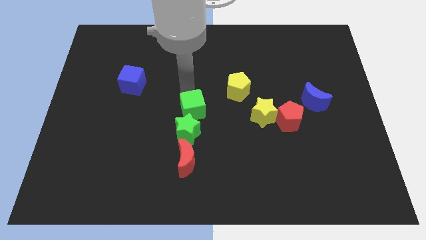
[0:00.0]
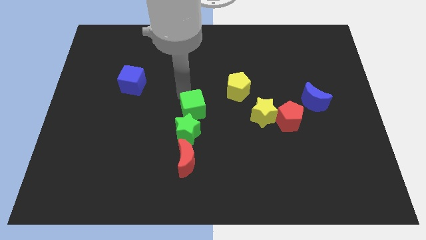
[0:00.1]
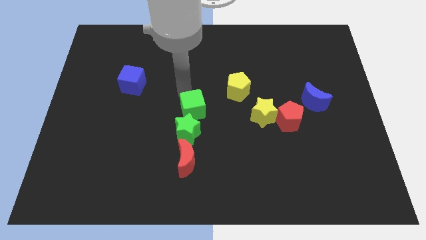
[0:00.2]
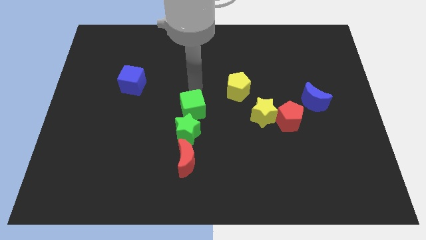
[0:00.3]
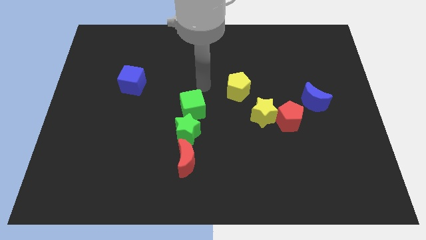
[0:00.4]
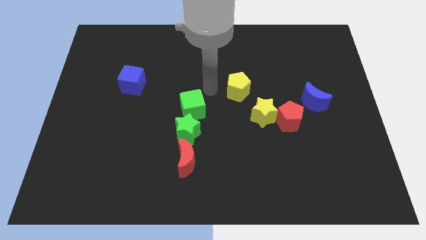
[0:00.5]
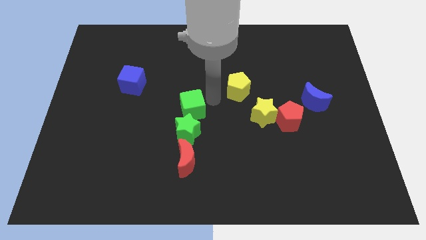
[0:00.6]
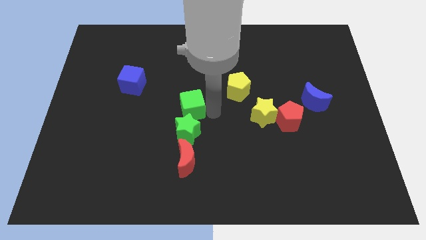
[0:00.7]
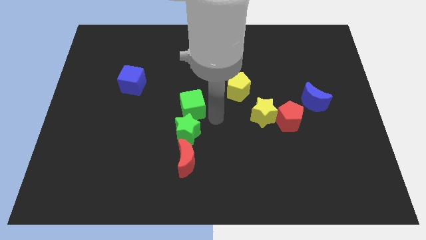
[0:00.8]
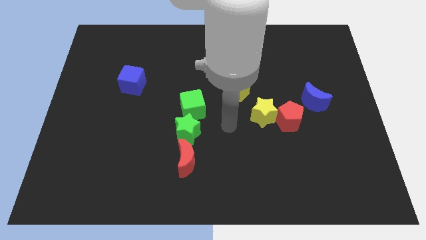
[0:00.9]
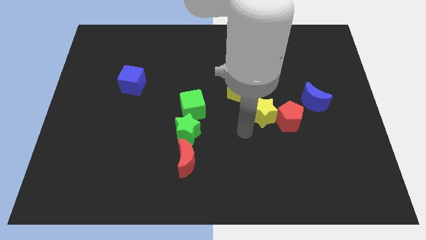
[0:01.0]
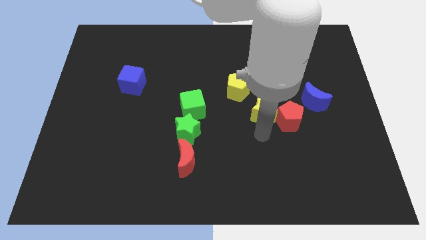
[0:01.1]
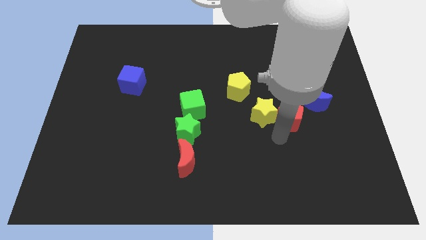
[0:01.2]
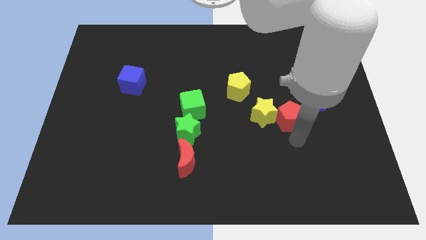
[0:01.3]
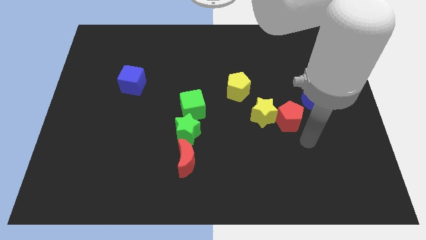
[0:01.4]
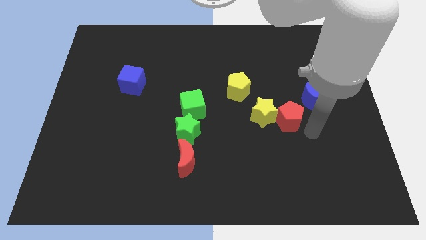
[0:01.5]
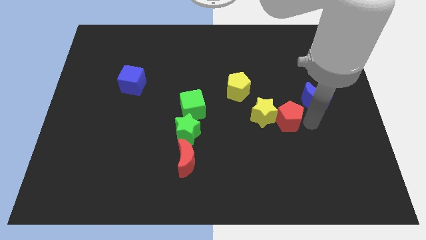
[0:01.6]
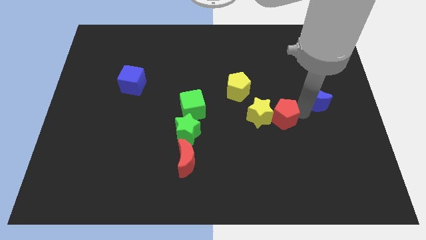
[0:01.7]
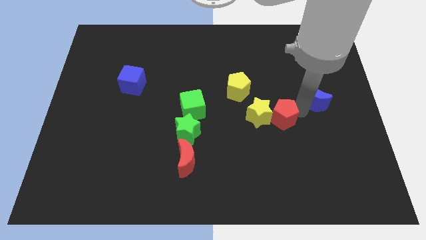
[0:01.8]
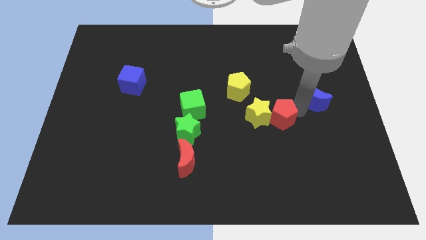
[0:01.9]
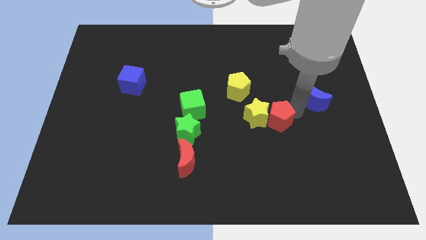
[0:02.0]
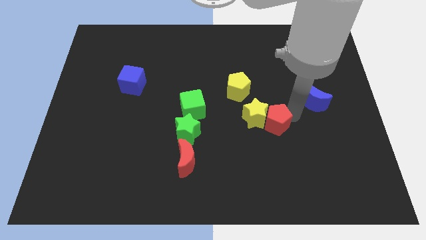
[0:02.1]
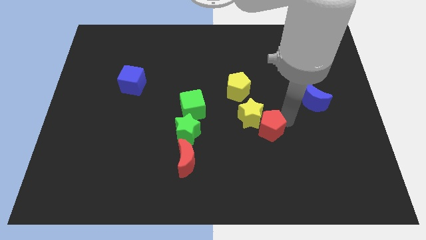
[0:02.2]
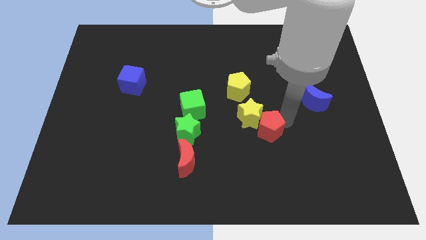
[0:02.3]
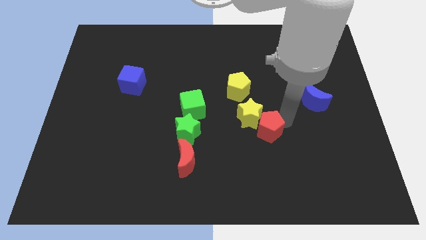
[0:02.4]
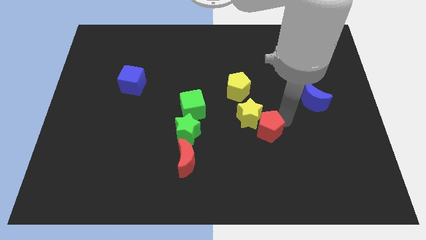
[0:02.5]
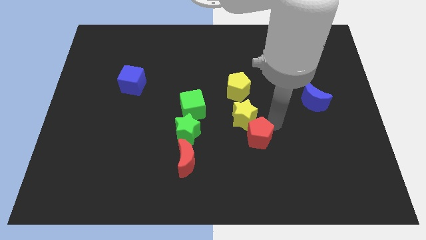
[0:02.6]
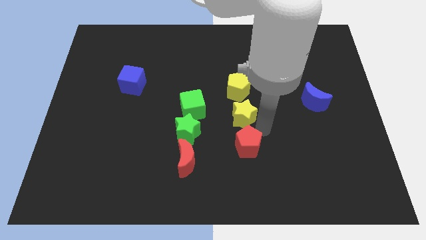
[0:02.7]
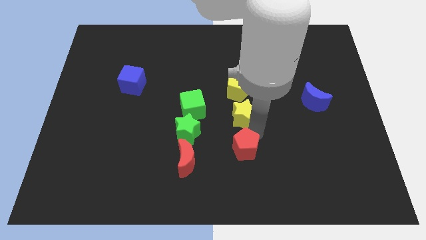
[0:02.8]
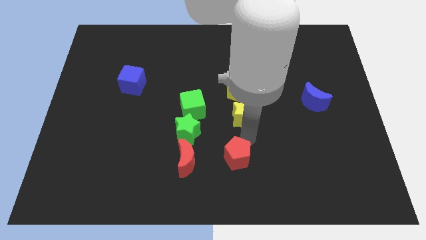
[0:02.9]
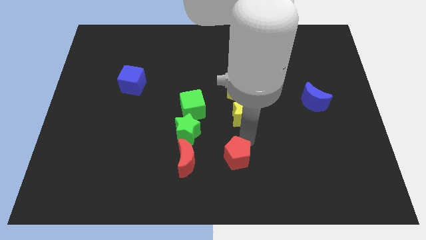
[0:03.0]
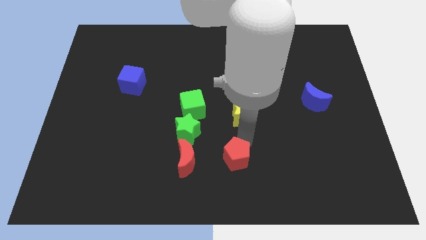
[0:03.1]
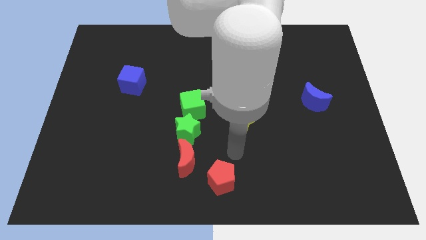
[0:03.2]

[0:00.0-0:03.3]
push the red pentagon to the right side of the red moon

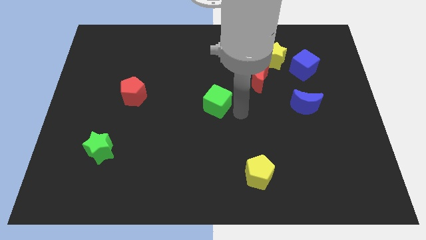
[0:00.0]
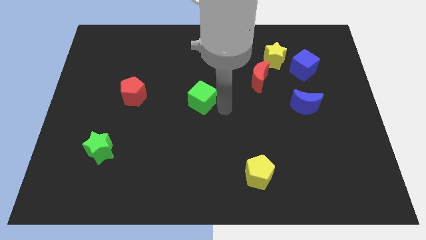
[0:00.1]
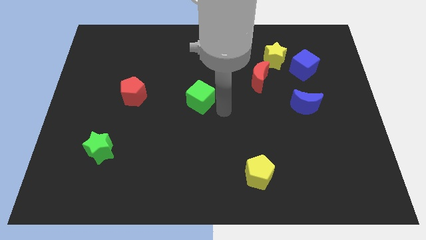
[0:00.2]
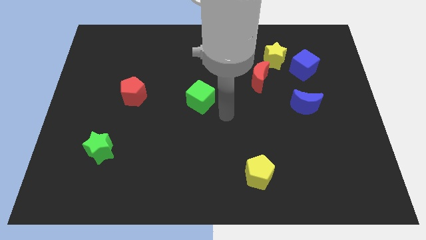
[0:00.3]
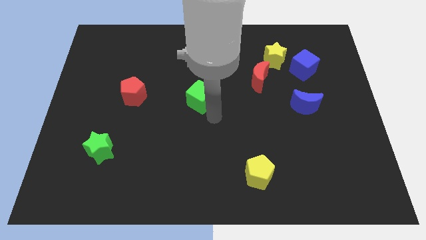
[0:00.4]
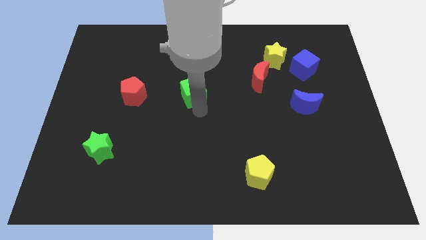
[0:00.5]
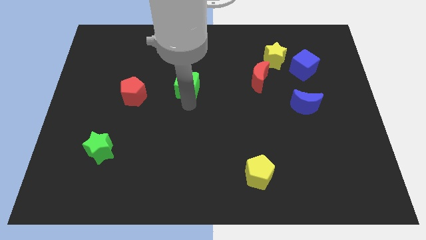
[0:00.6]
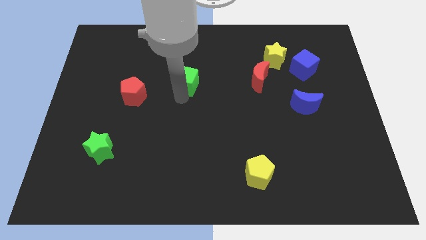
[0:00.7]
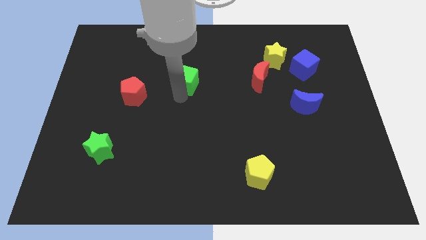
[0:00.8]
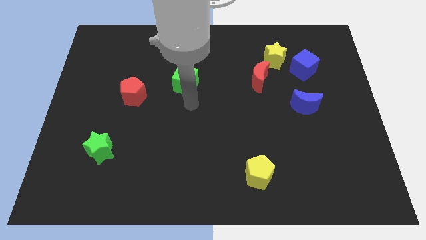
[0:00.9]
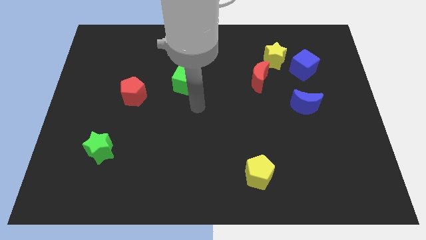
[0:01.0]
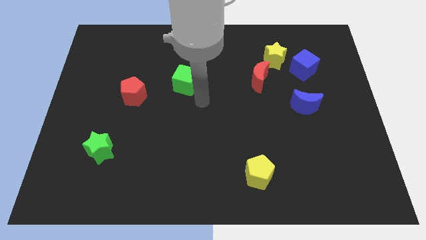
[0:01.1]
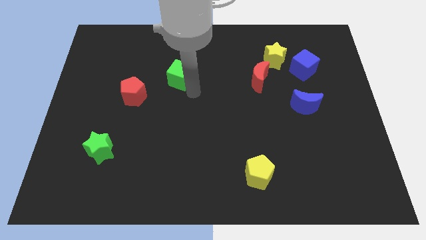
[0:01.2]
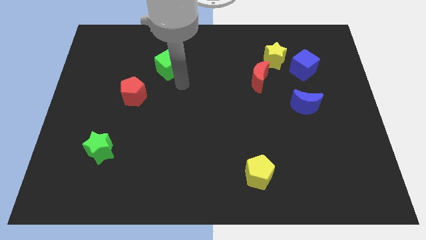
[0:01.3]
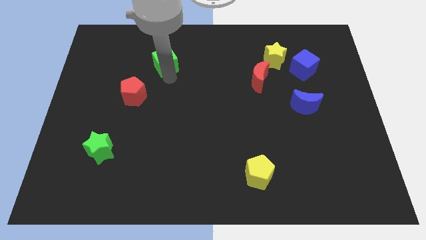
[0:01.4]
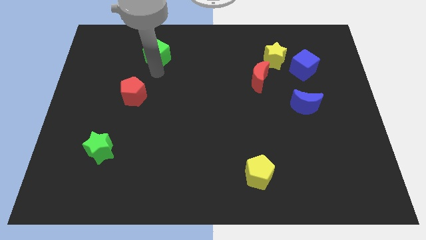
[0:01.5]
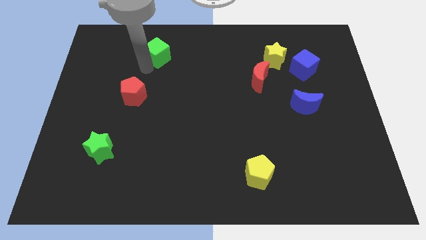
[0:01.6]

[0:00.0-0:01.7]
move the green cube towards the top left of the board

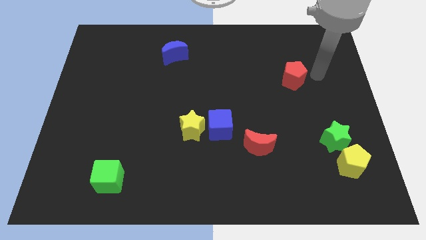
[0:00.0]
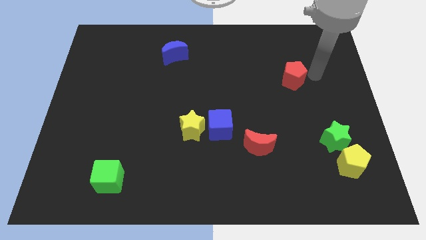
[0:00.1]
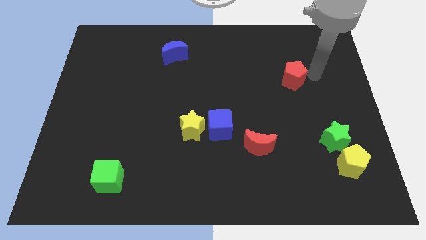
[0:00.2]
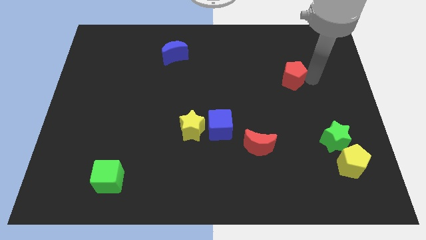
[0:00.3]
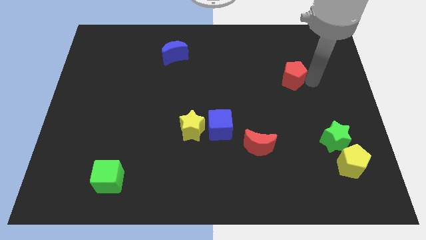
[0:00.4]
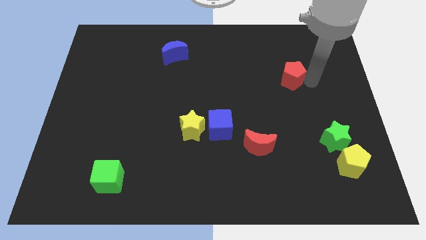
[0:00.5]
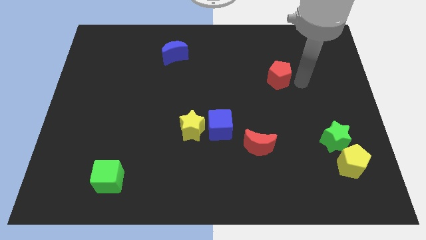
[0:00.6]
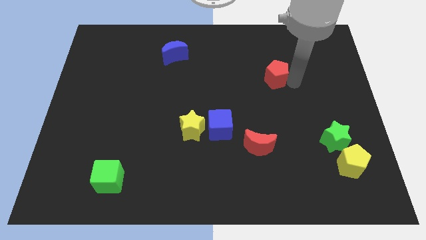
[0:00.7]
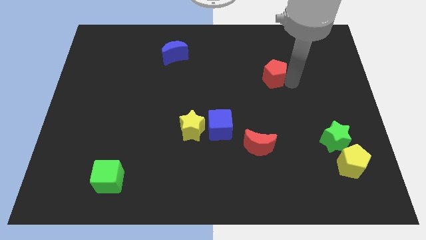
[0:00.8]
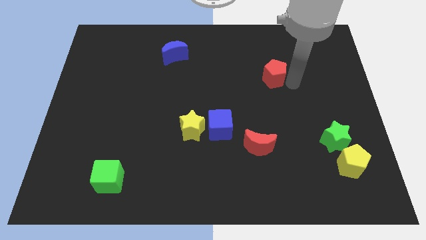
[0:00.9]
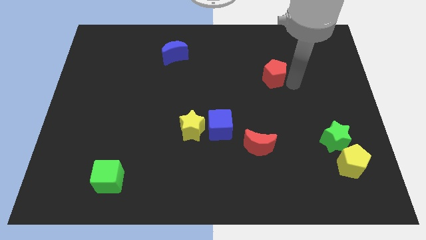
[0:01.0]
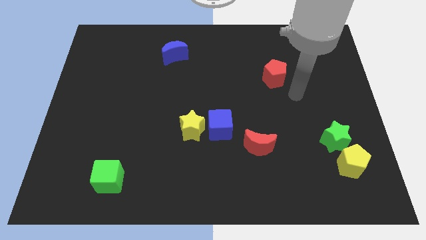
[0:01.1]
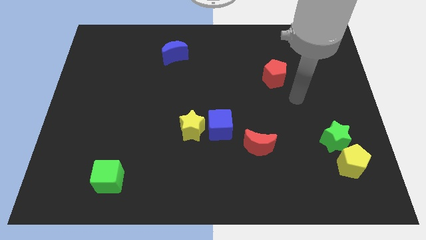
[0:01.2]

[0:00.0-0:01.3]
move the red pentagon slightly to the left side of the board

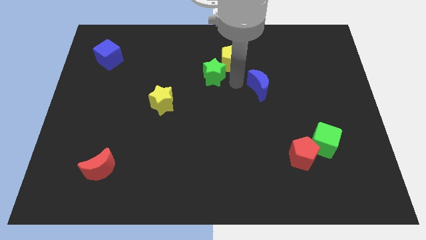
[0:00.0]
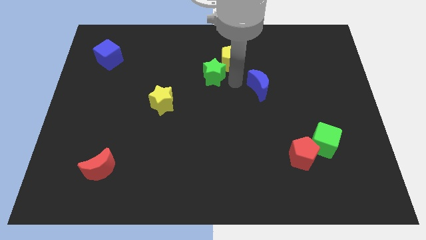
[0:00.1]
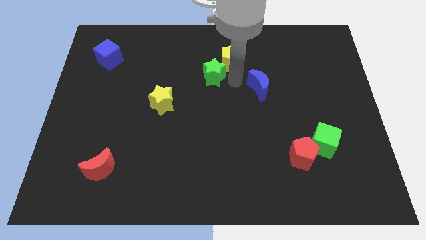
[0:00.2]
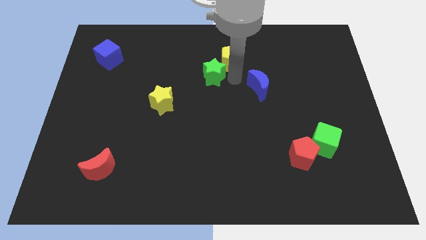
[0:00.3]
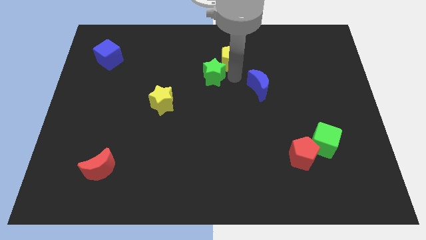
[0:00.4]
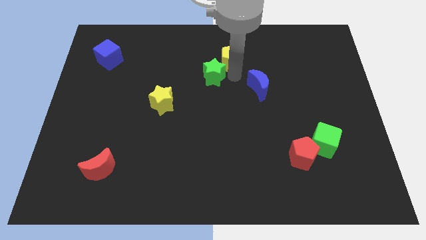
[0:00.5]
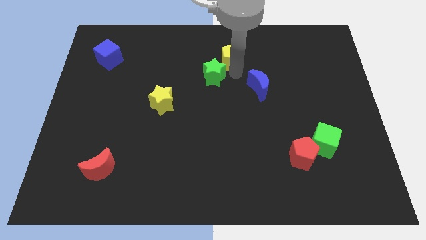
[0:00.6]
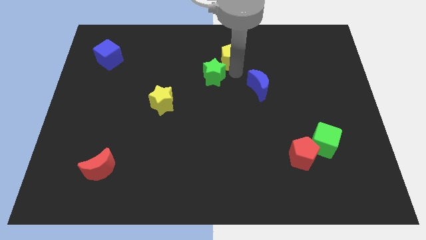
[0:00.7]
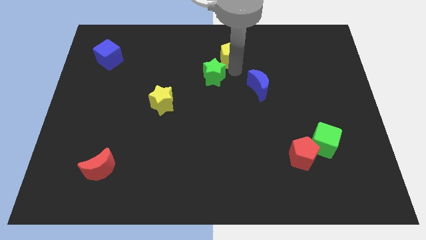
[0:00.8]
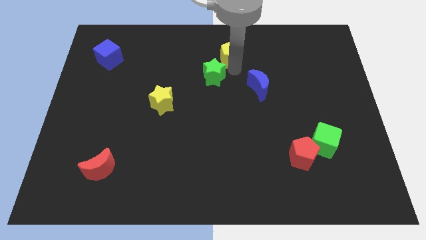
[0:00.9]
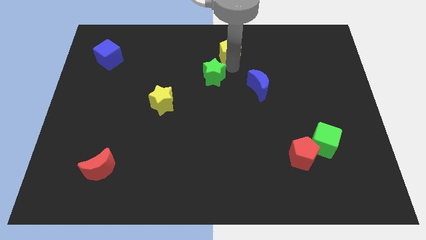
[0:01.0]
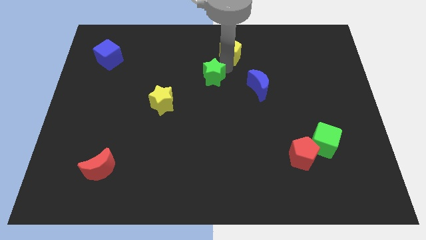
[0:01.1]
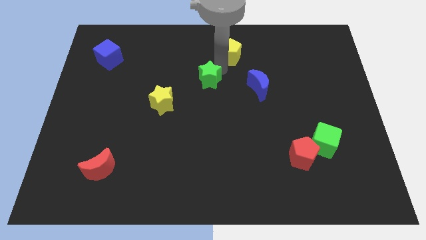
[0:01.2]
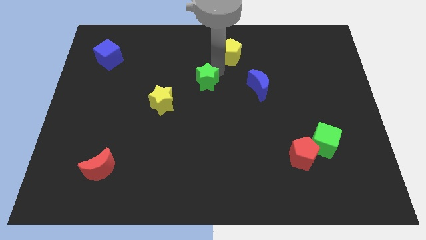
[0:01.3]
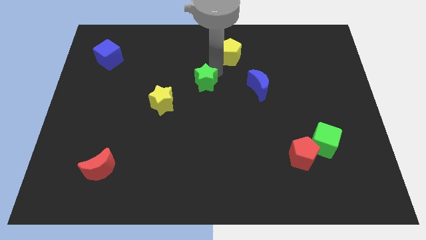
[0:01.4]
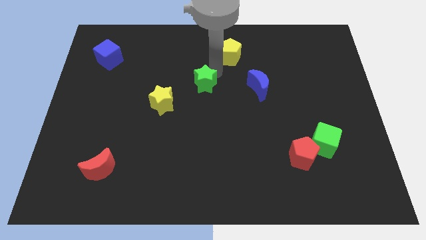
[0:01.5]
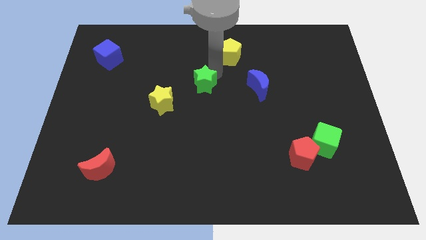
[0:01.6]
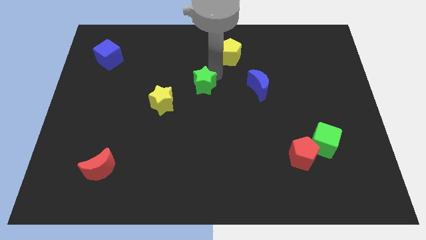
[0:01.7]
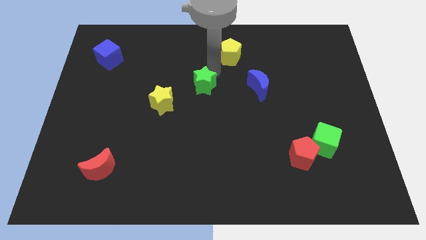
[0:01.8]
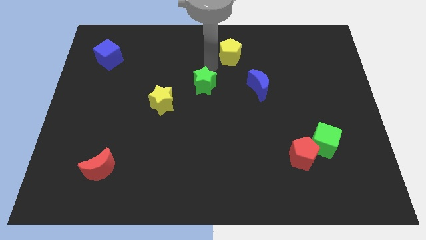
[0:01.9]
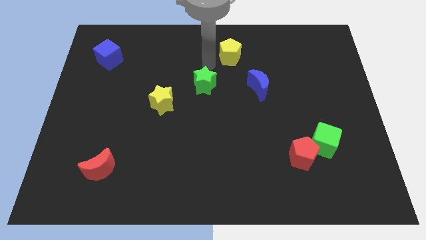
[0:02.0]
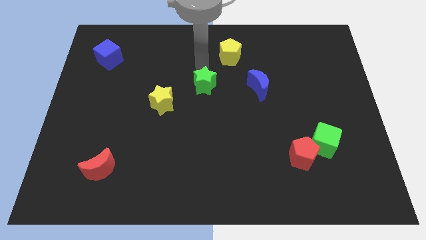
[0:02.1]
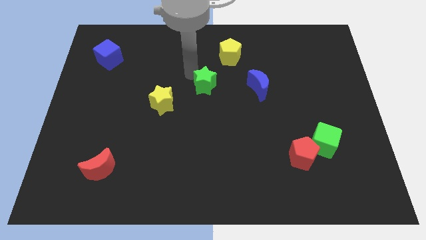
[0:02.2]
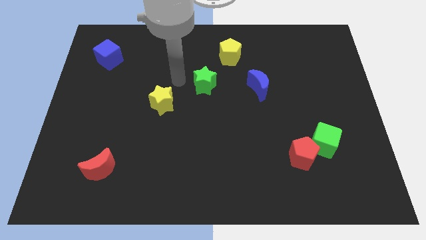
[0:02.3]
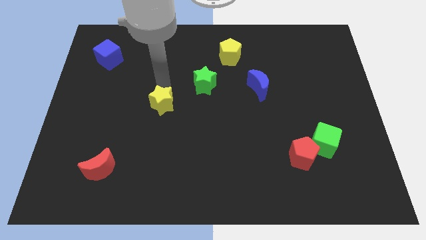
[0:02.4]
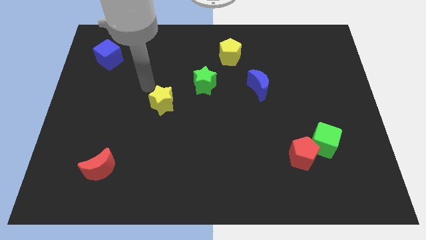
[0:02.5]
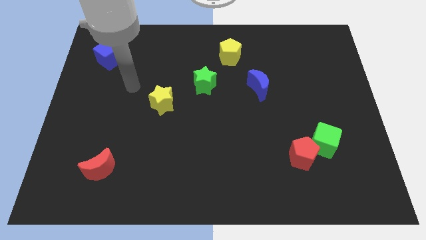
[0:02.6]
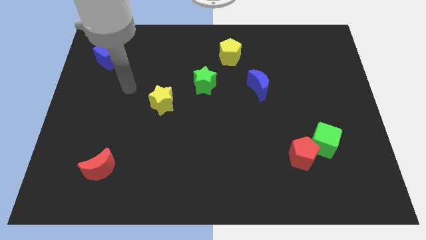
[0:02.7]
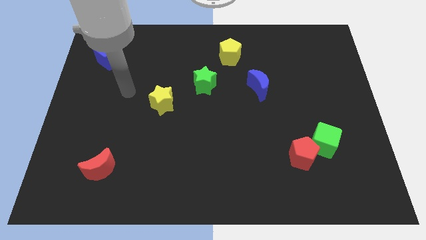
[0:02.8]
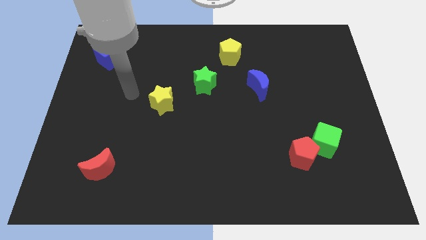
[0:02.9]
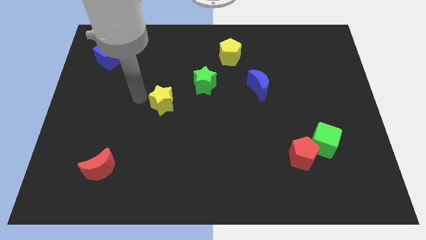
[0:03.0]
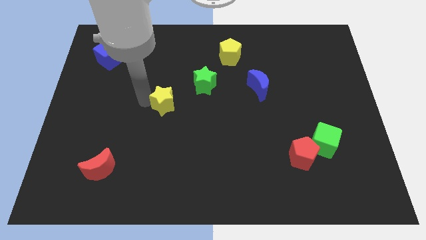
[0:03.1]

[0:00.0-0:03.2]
separate the green star and yellow pentagon
